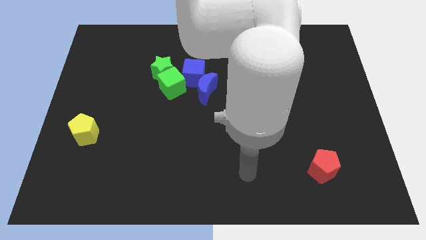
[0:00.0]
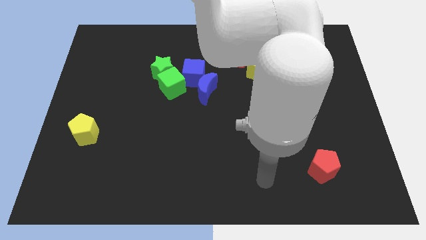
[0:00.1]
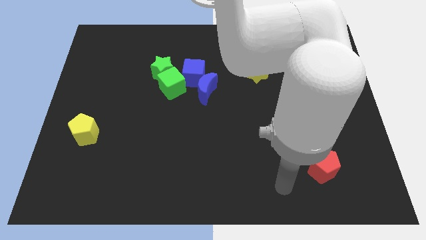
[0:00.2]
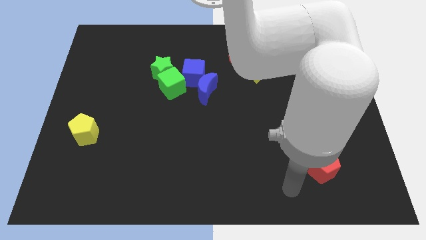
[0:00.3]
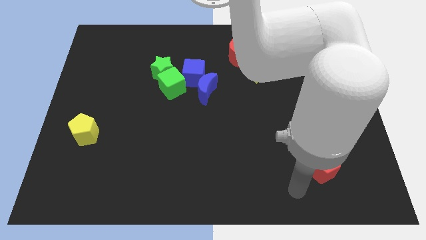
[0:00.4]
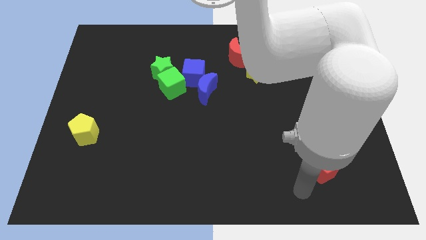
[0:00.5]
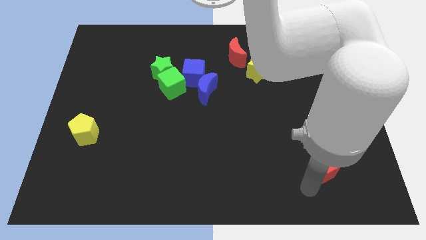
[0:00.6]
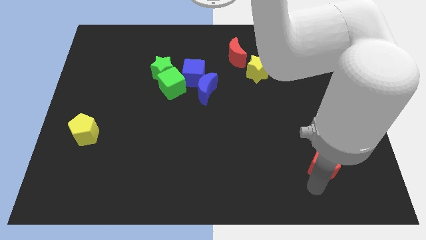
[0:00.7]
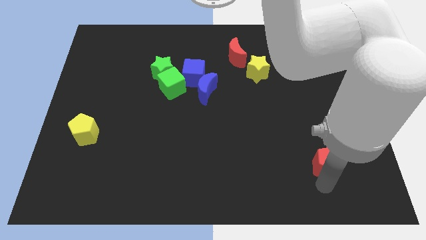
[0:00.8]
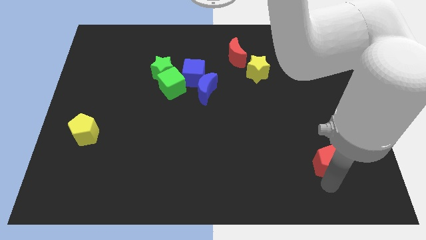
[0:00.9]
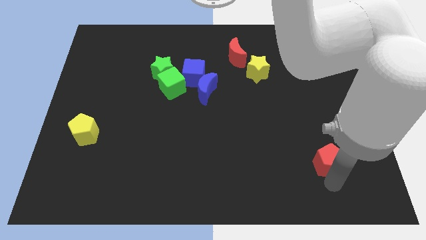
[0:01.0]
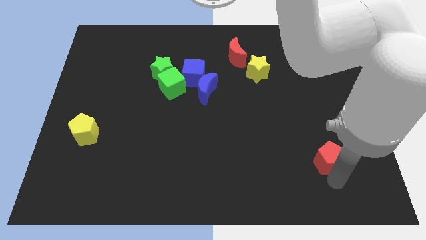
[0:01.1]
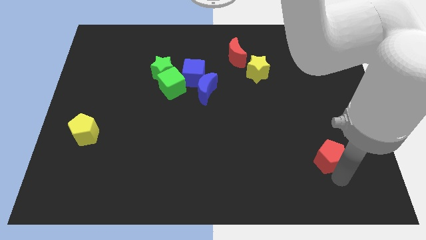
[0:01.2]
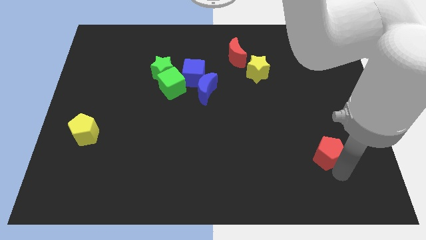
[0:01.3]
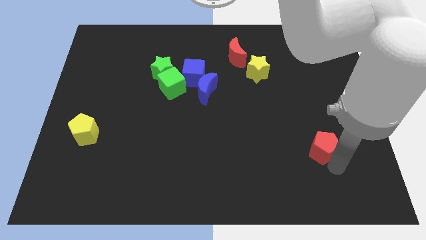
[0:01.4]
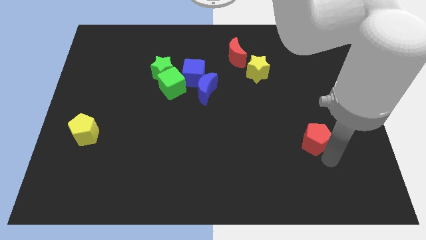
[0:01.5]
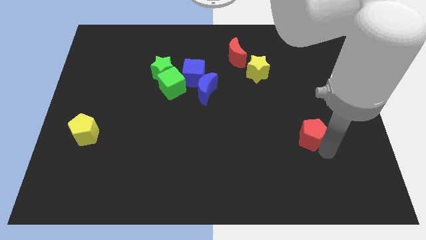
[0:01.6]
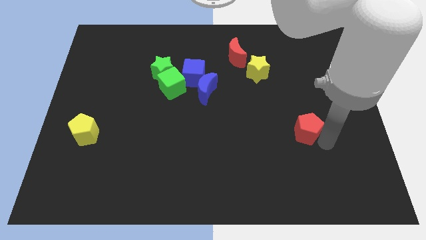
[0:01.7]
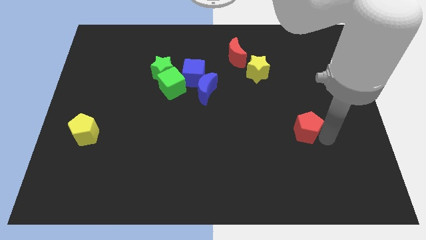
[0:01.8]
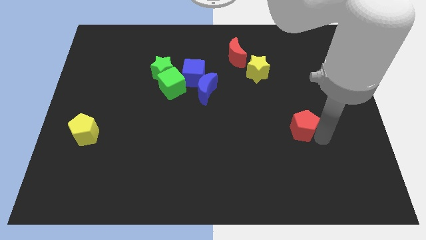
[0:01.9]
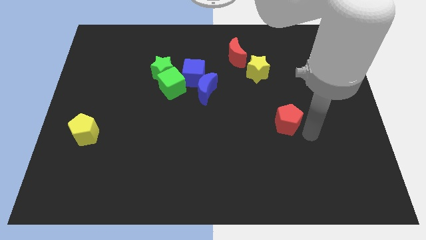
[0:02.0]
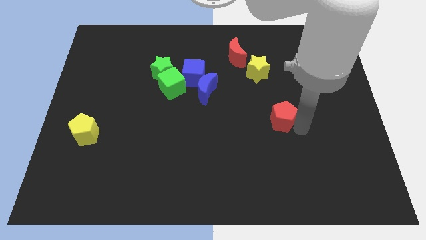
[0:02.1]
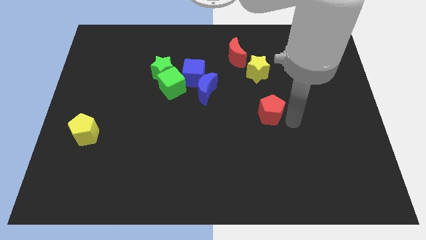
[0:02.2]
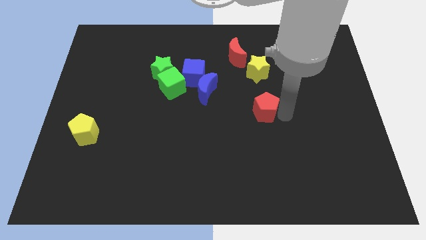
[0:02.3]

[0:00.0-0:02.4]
move red pentagon towards center of the board

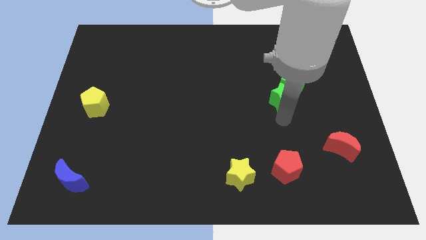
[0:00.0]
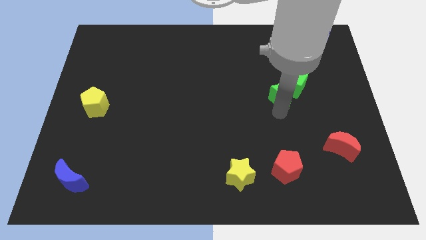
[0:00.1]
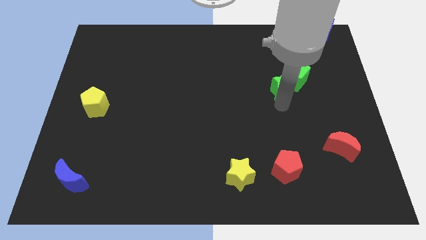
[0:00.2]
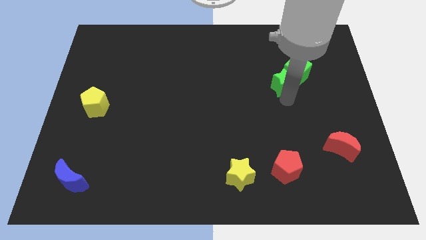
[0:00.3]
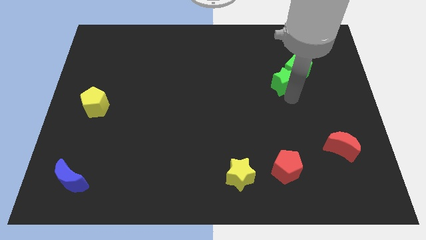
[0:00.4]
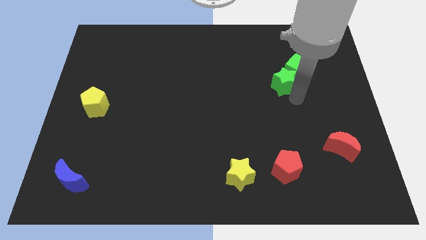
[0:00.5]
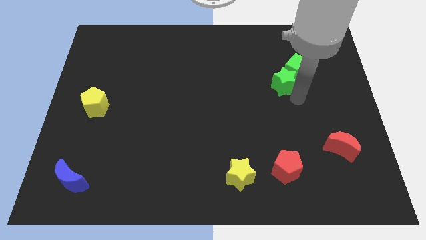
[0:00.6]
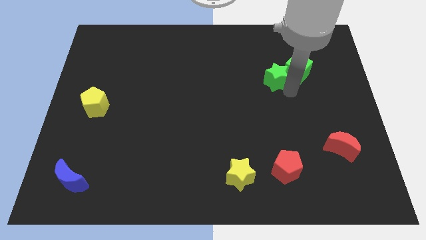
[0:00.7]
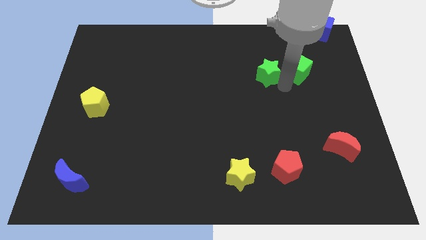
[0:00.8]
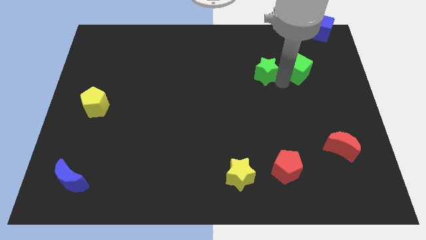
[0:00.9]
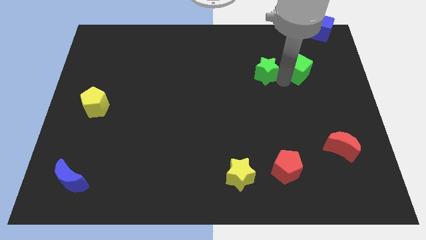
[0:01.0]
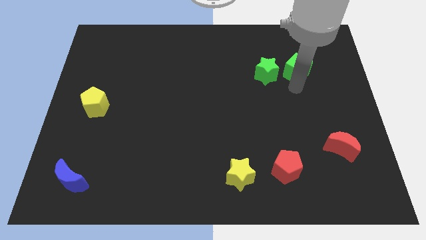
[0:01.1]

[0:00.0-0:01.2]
separate the group of green blocks

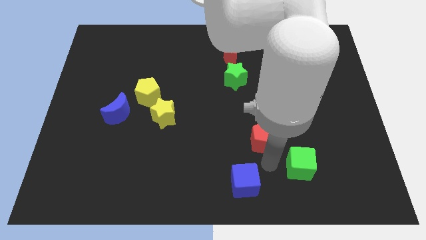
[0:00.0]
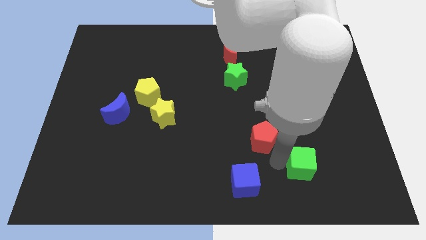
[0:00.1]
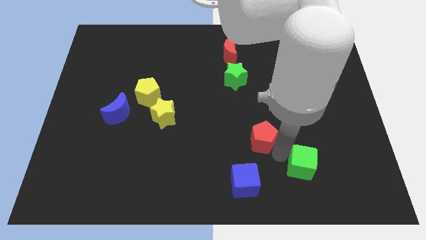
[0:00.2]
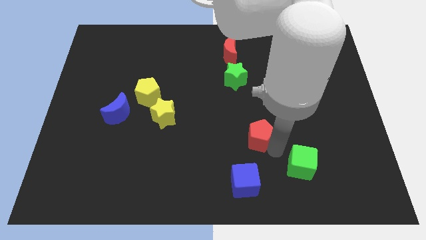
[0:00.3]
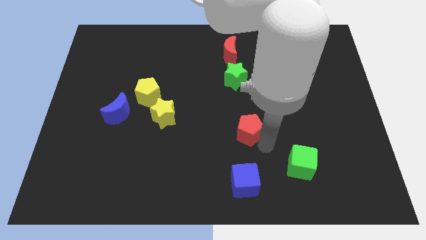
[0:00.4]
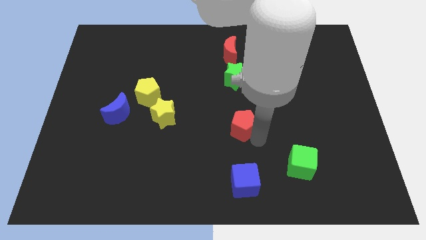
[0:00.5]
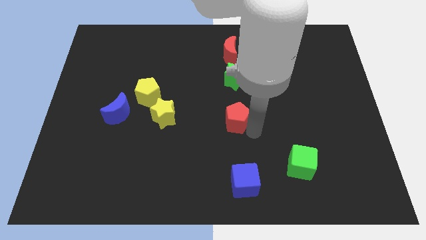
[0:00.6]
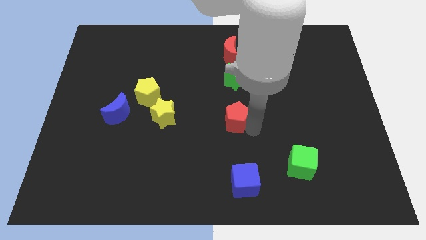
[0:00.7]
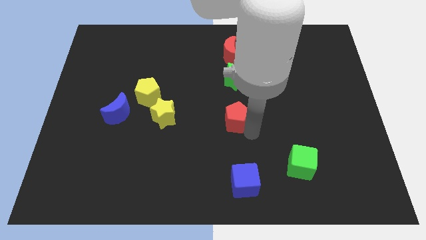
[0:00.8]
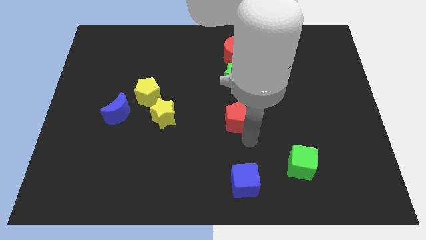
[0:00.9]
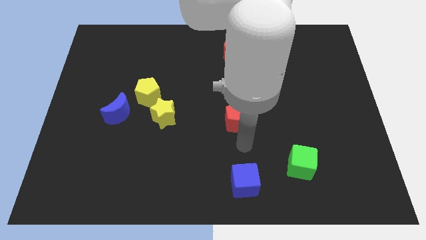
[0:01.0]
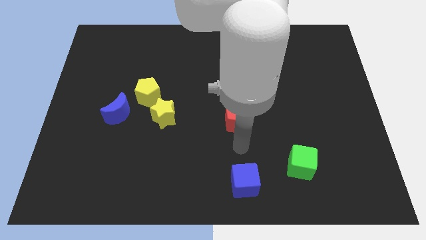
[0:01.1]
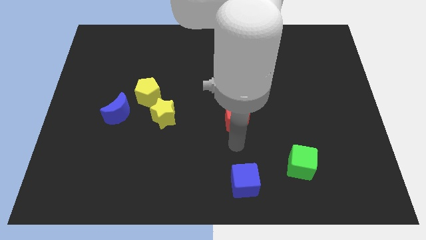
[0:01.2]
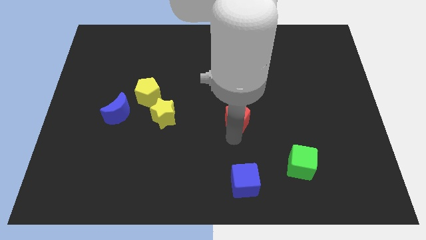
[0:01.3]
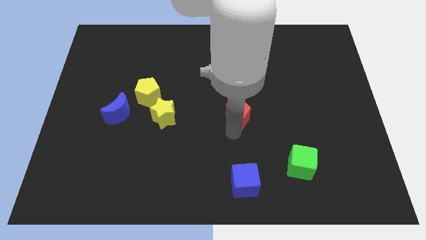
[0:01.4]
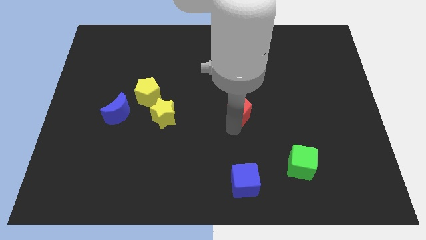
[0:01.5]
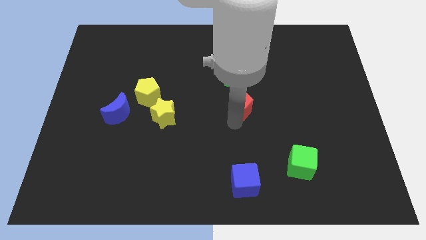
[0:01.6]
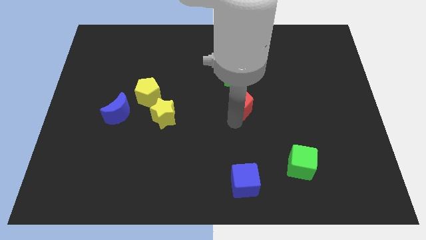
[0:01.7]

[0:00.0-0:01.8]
move the red pentagon to the bottom of the green star

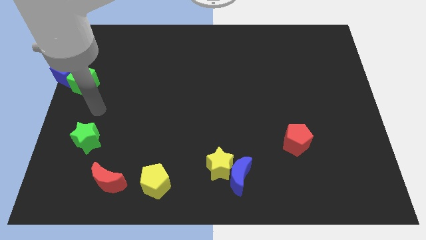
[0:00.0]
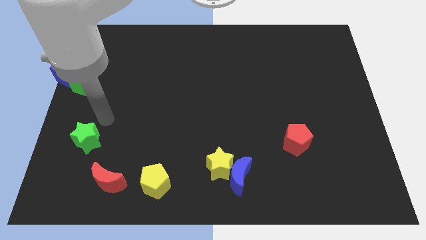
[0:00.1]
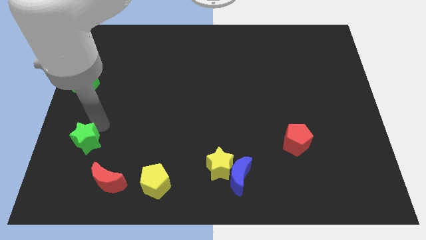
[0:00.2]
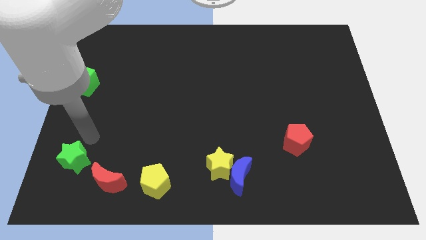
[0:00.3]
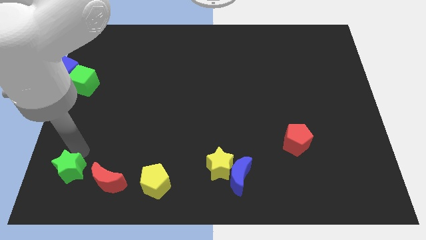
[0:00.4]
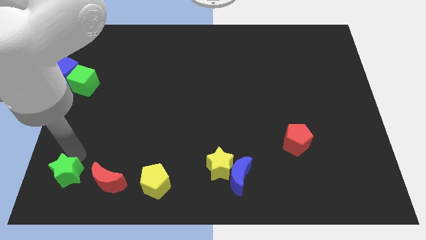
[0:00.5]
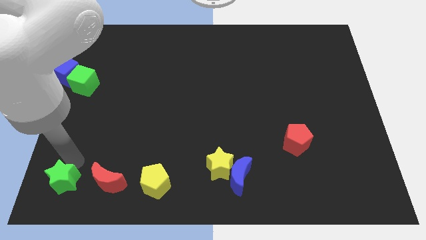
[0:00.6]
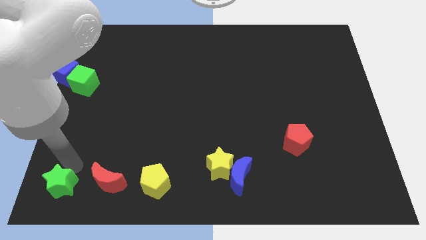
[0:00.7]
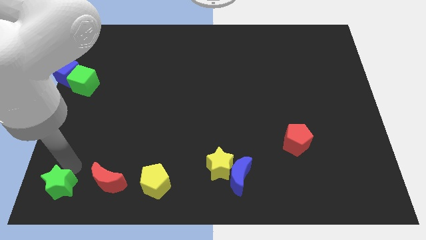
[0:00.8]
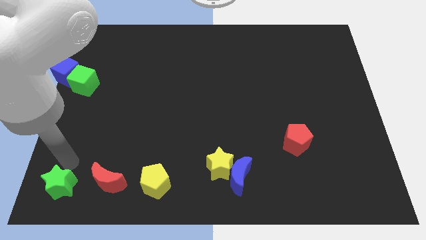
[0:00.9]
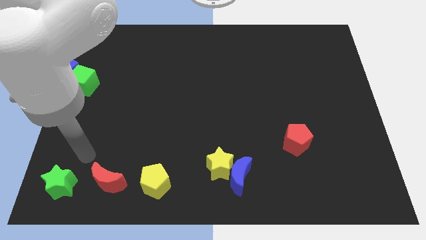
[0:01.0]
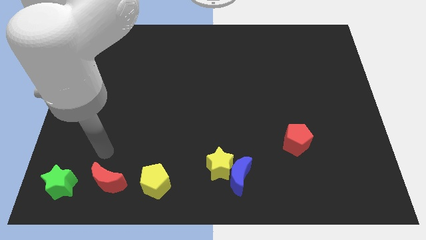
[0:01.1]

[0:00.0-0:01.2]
move the green star left to the red crescent

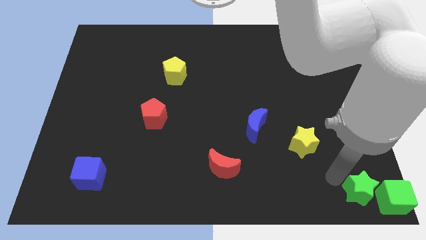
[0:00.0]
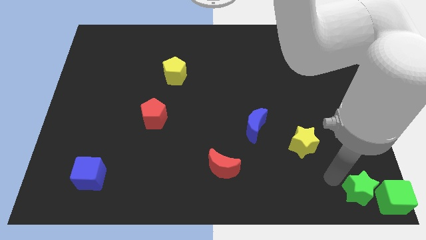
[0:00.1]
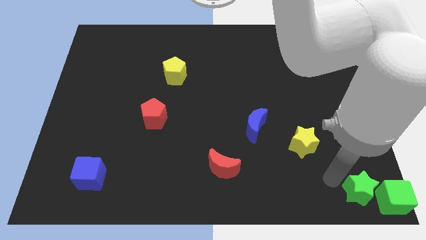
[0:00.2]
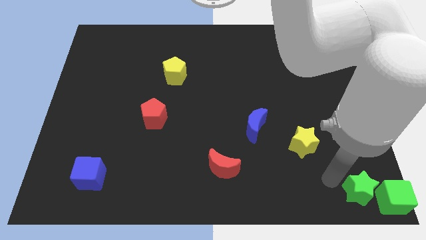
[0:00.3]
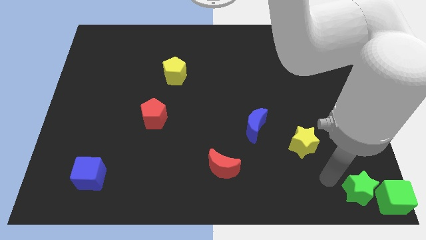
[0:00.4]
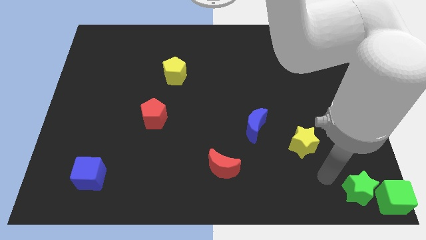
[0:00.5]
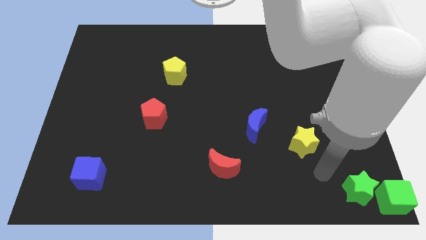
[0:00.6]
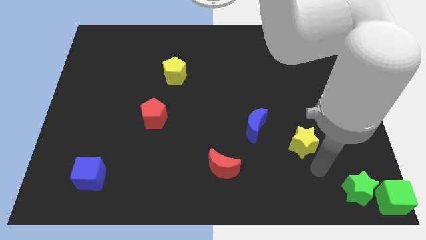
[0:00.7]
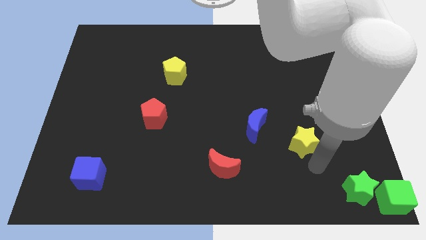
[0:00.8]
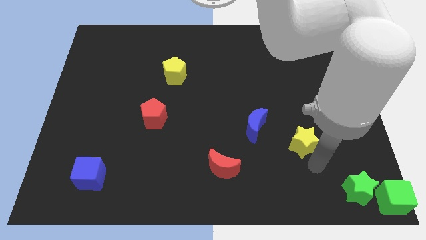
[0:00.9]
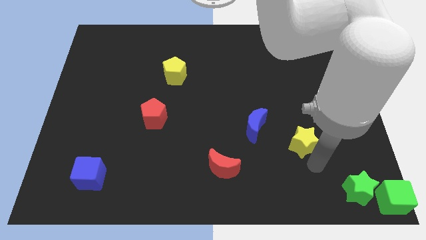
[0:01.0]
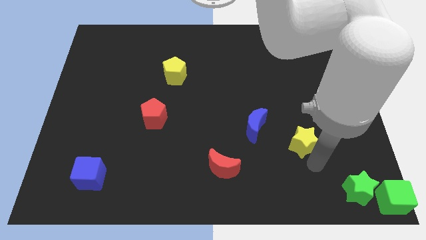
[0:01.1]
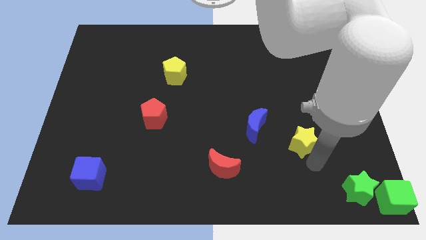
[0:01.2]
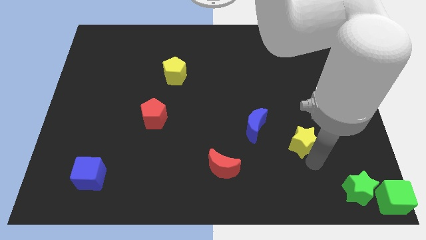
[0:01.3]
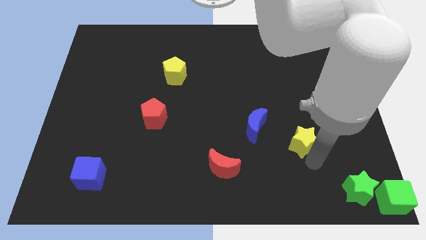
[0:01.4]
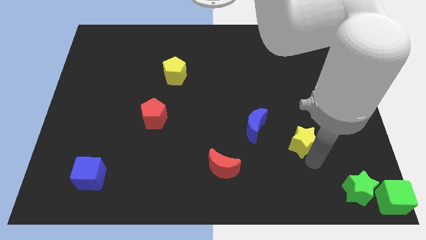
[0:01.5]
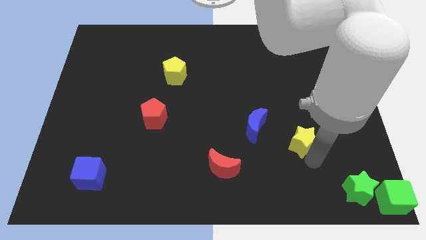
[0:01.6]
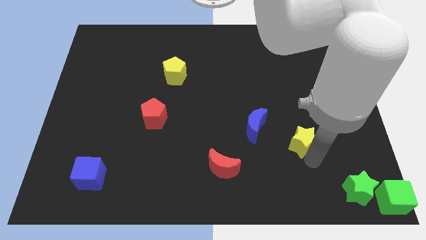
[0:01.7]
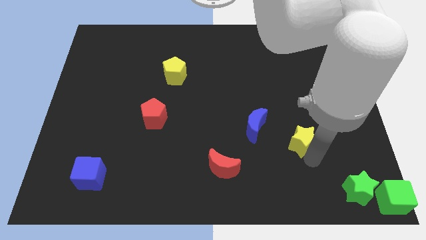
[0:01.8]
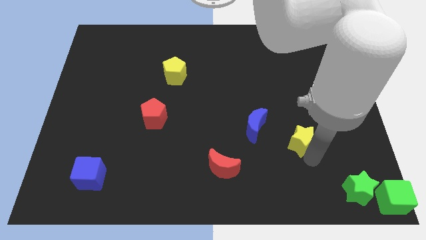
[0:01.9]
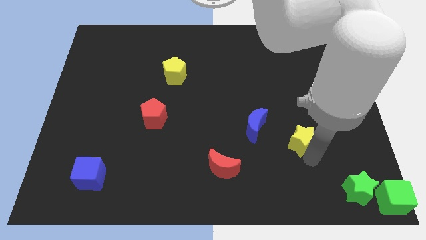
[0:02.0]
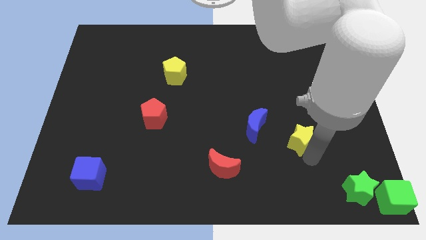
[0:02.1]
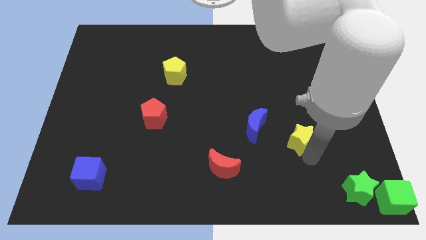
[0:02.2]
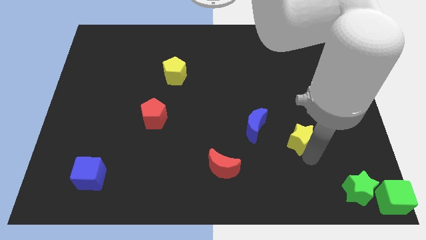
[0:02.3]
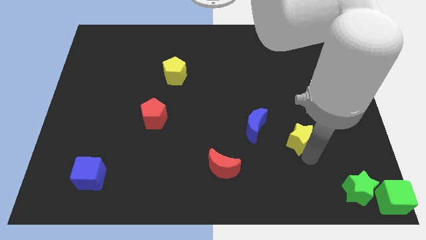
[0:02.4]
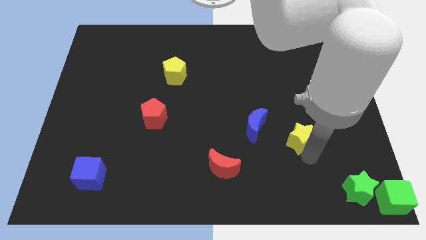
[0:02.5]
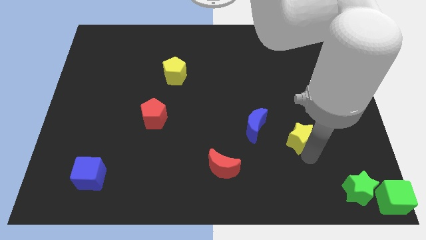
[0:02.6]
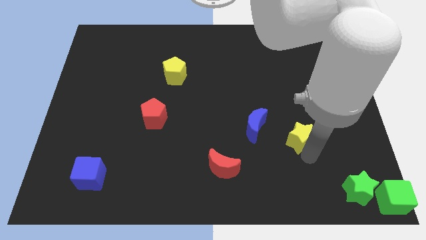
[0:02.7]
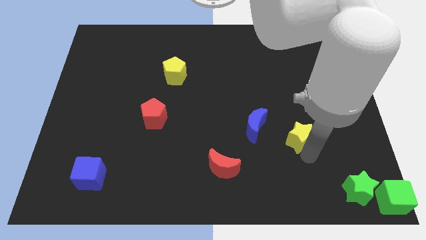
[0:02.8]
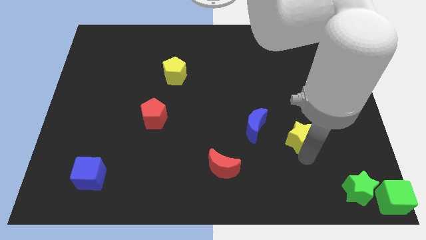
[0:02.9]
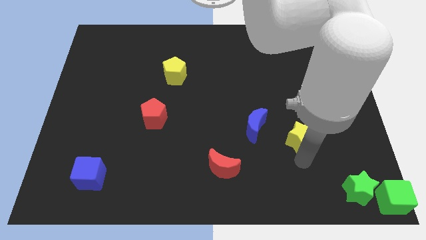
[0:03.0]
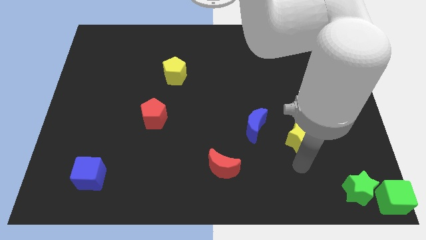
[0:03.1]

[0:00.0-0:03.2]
go near yellow star
